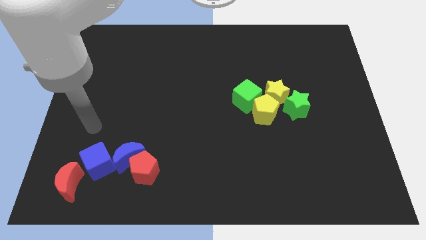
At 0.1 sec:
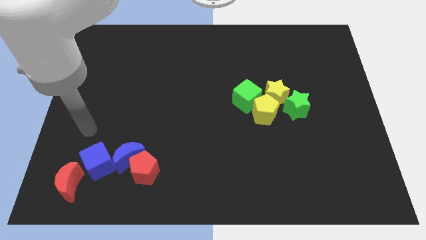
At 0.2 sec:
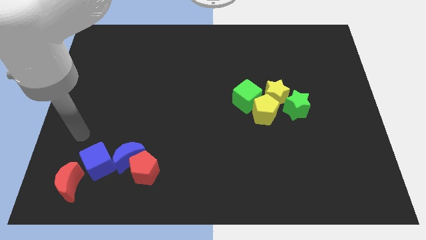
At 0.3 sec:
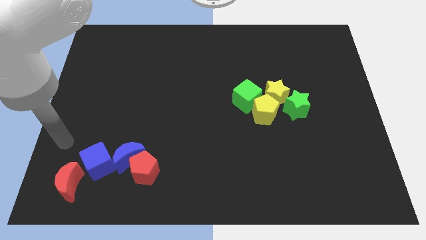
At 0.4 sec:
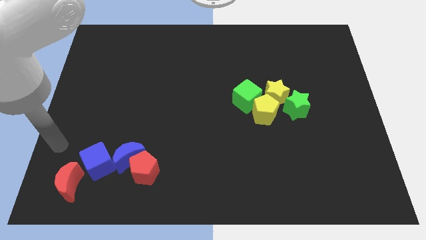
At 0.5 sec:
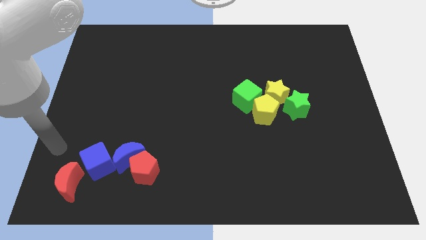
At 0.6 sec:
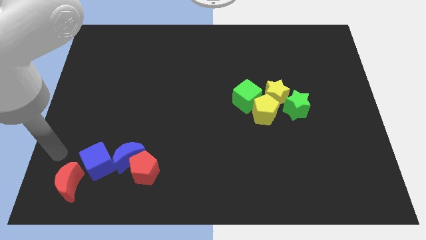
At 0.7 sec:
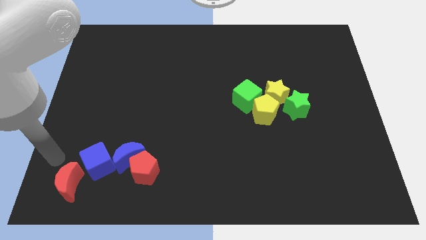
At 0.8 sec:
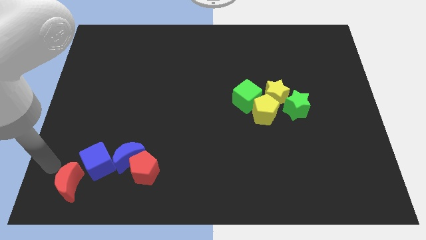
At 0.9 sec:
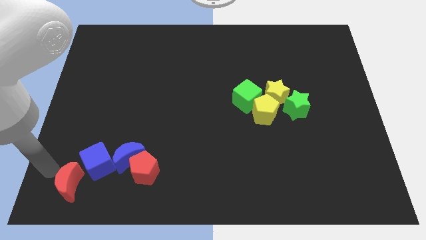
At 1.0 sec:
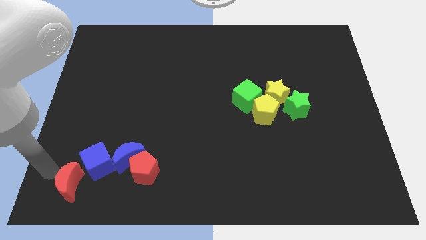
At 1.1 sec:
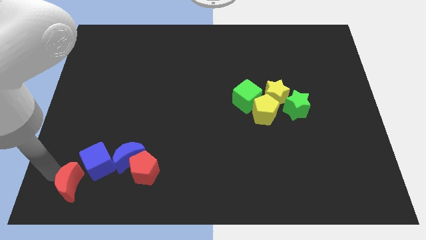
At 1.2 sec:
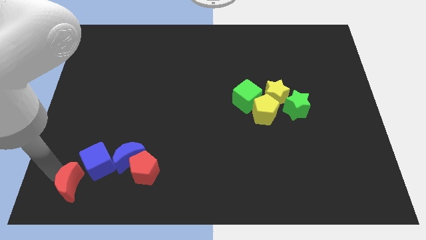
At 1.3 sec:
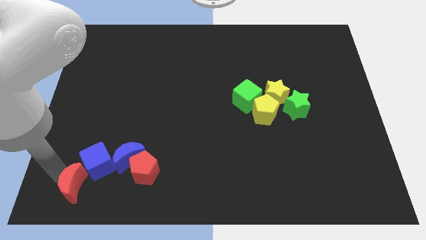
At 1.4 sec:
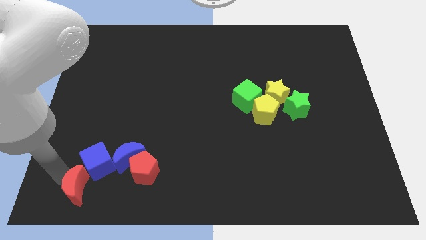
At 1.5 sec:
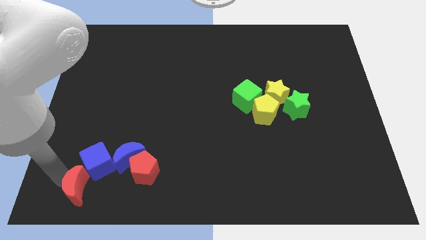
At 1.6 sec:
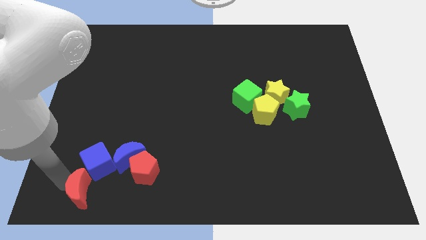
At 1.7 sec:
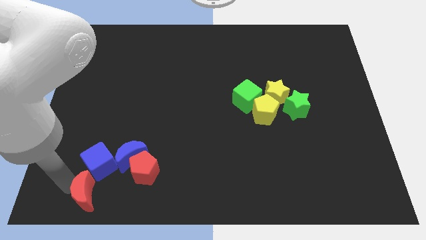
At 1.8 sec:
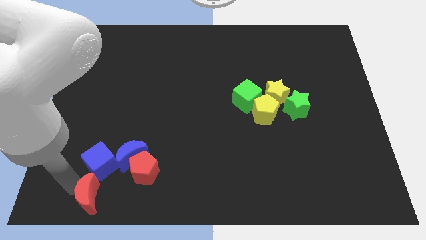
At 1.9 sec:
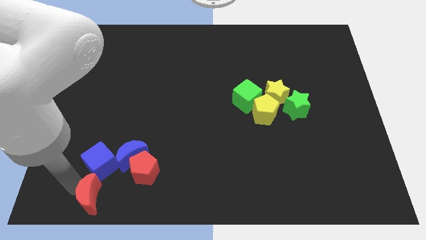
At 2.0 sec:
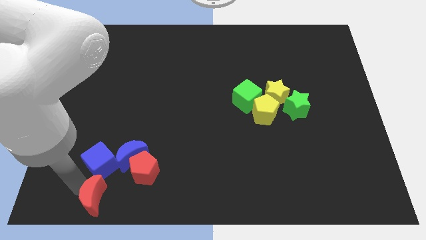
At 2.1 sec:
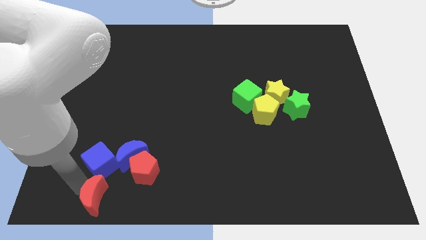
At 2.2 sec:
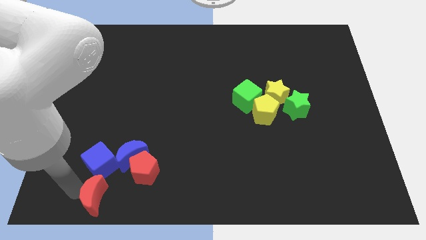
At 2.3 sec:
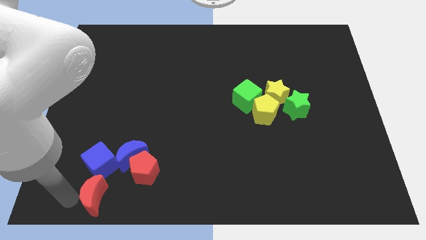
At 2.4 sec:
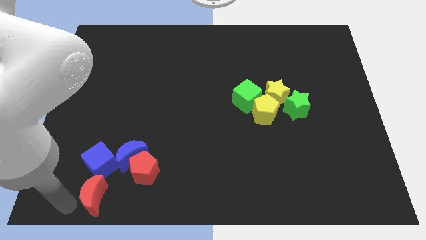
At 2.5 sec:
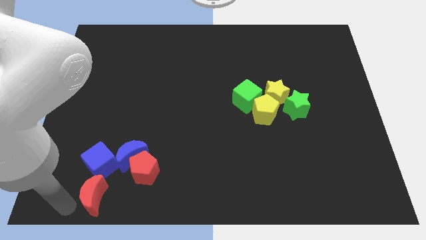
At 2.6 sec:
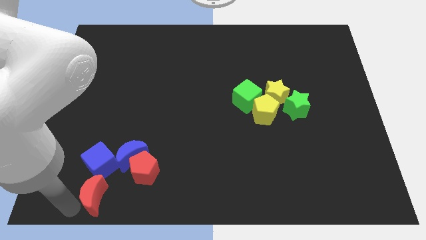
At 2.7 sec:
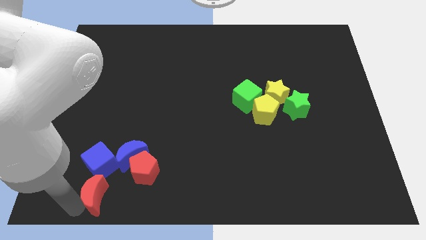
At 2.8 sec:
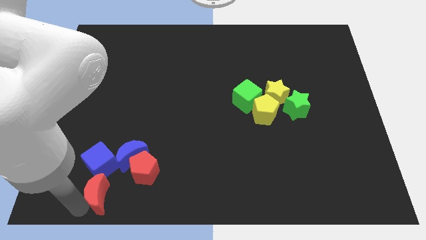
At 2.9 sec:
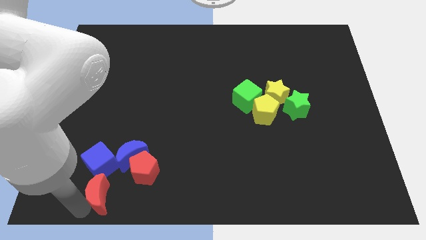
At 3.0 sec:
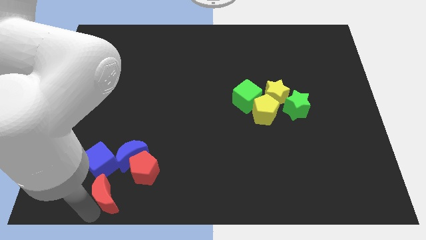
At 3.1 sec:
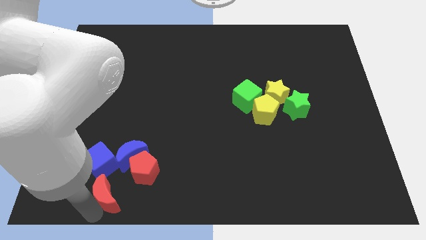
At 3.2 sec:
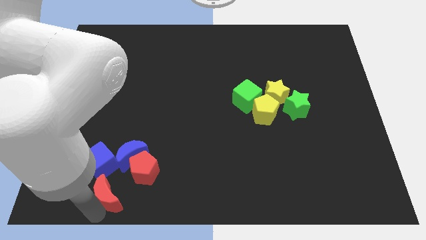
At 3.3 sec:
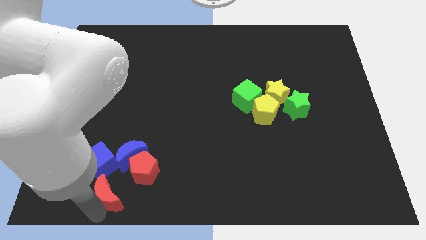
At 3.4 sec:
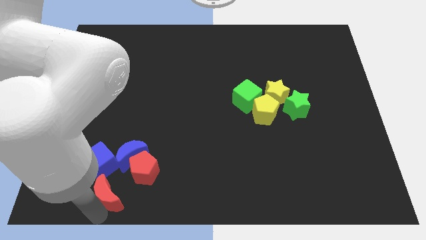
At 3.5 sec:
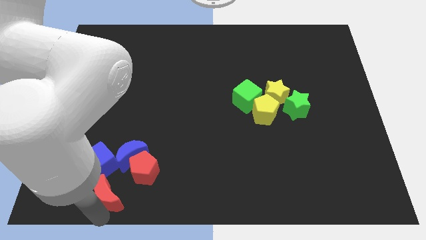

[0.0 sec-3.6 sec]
adjust the red moon to the bottom of the blue cube

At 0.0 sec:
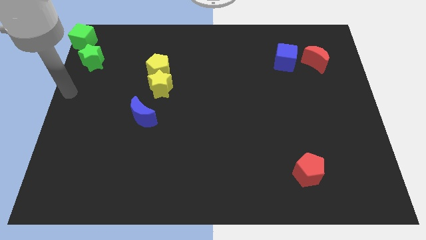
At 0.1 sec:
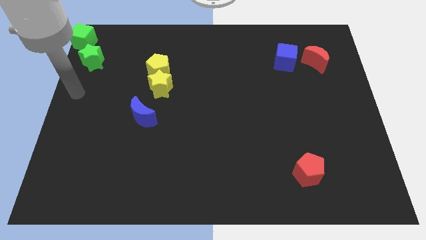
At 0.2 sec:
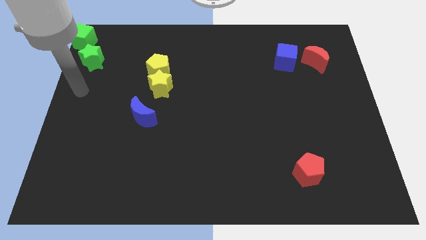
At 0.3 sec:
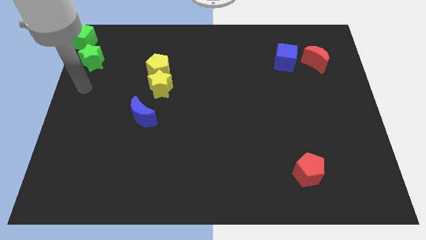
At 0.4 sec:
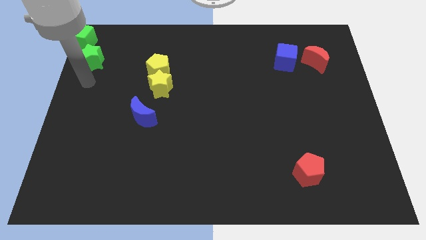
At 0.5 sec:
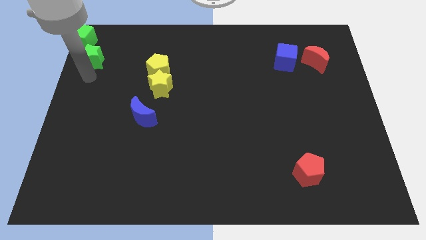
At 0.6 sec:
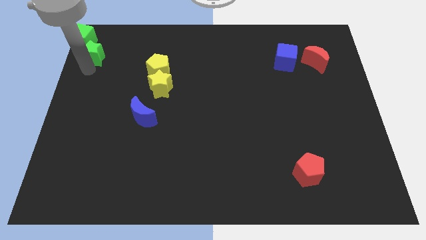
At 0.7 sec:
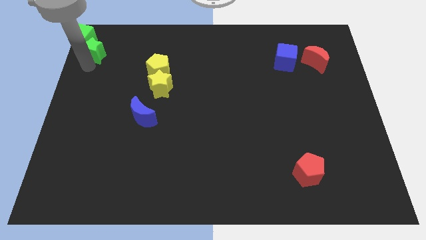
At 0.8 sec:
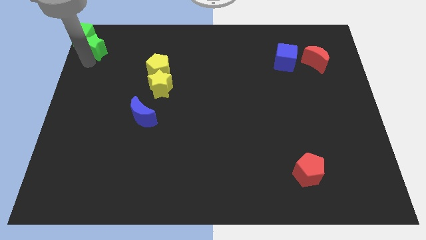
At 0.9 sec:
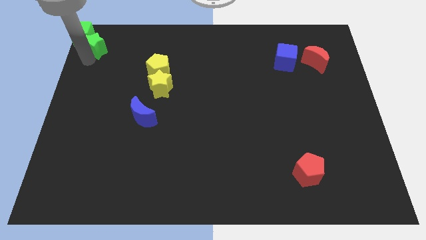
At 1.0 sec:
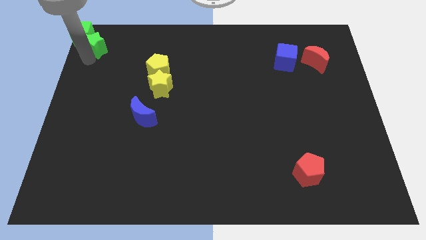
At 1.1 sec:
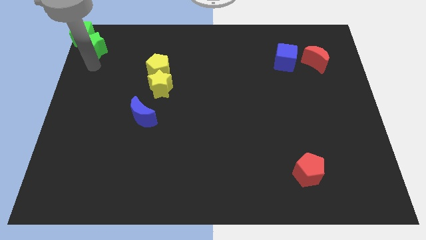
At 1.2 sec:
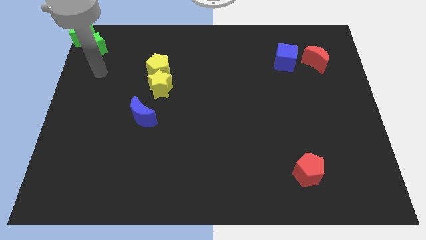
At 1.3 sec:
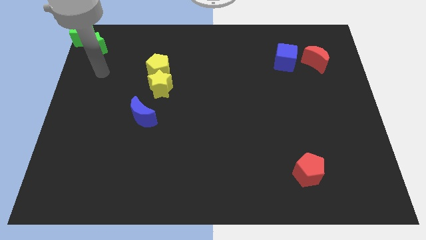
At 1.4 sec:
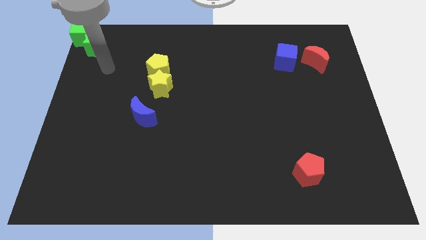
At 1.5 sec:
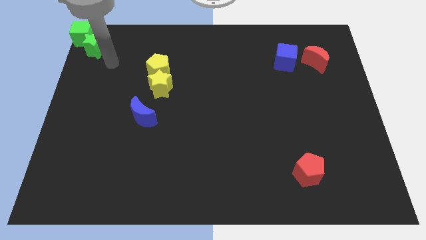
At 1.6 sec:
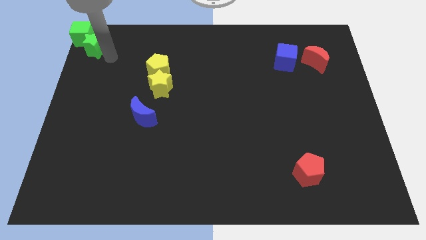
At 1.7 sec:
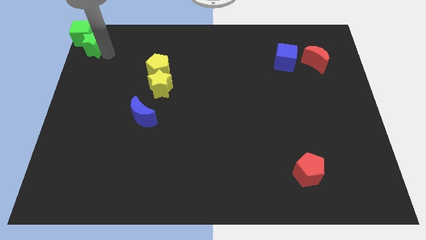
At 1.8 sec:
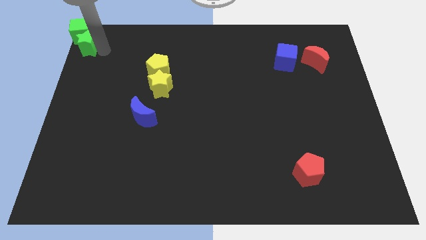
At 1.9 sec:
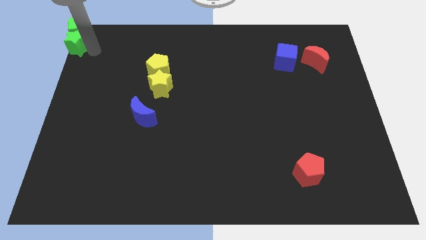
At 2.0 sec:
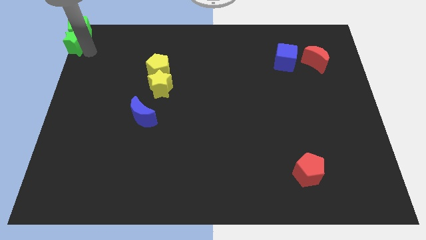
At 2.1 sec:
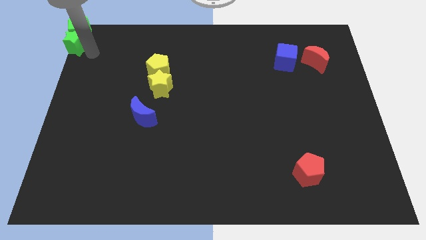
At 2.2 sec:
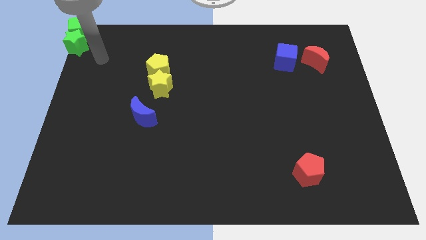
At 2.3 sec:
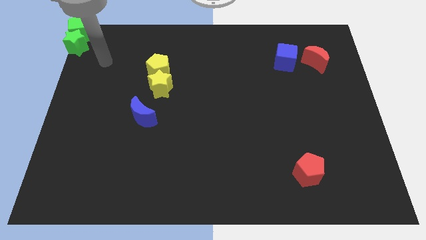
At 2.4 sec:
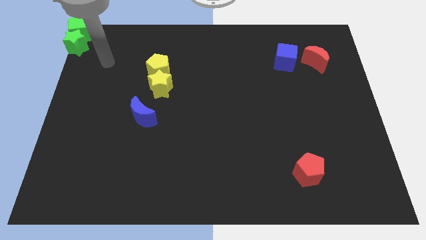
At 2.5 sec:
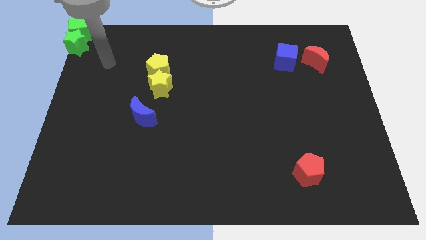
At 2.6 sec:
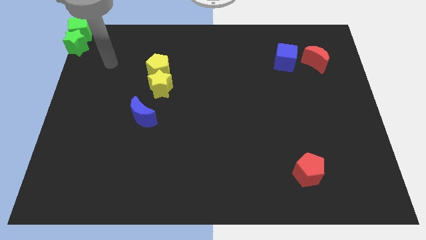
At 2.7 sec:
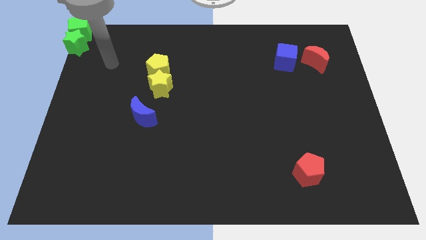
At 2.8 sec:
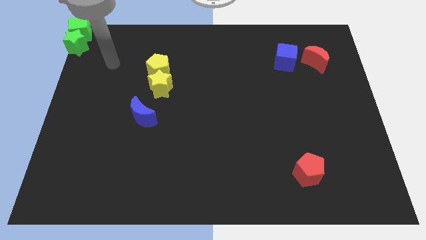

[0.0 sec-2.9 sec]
place the green star under the green cube

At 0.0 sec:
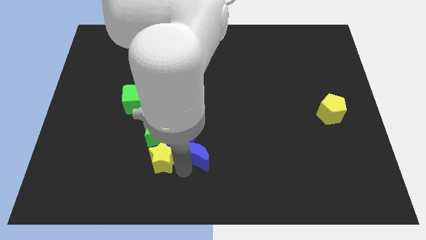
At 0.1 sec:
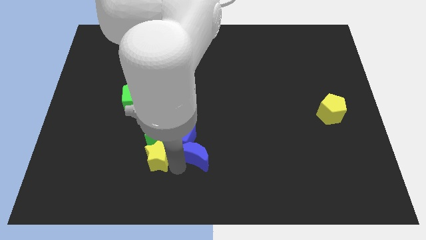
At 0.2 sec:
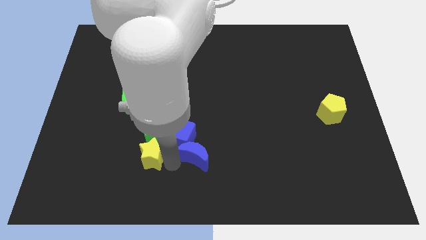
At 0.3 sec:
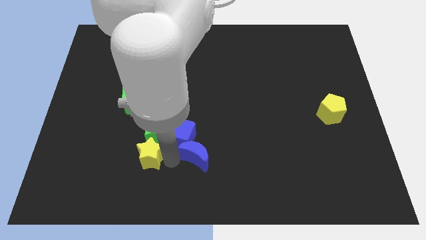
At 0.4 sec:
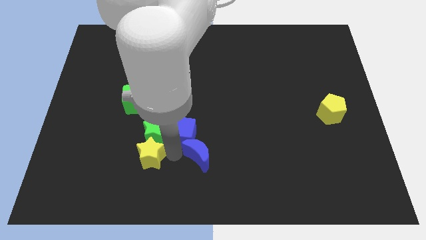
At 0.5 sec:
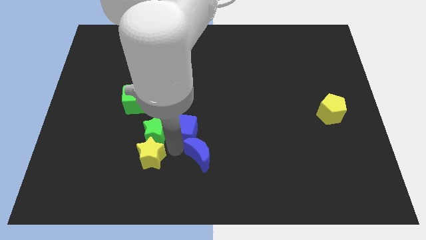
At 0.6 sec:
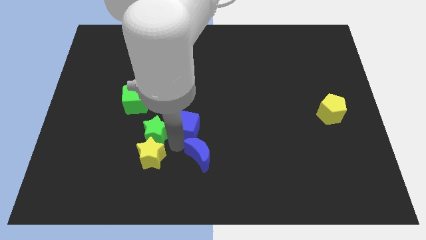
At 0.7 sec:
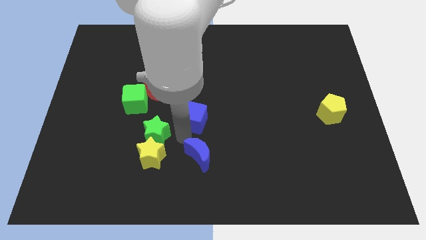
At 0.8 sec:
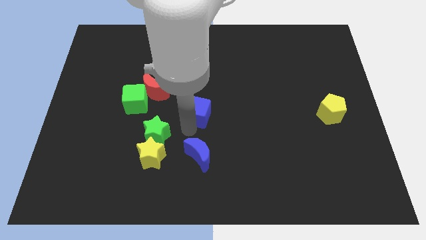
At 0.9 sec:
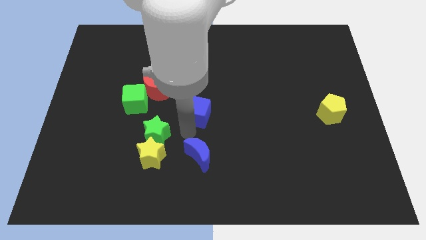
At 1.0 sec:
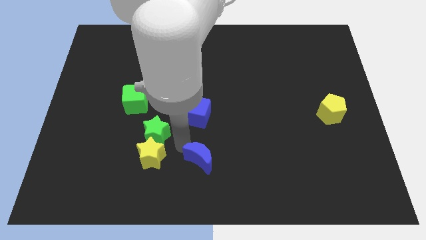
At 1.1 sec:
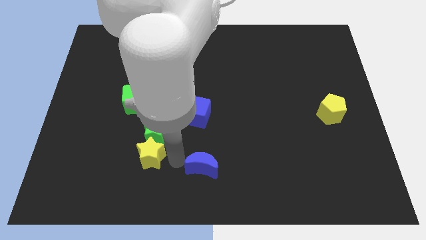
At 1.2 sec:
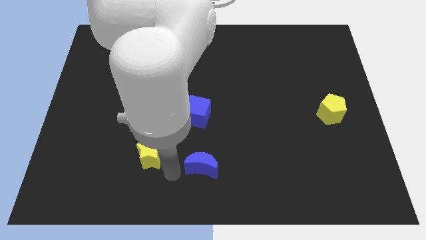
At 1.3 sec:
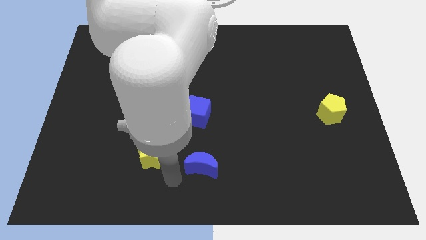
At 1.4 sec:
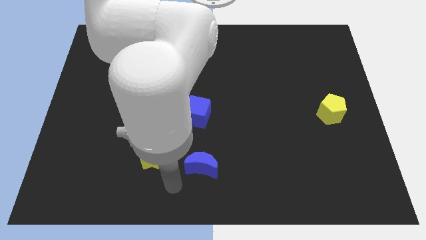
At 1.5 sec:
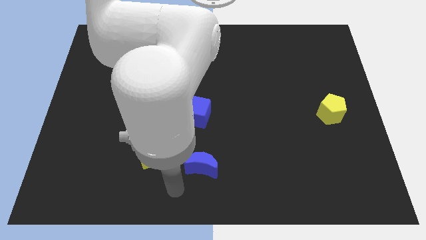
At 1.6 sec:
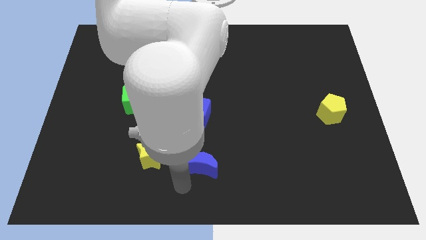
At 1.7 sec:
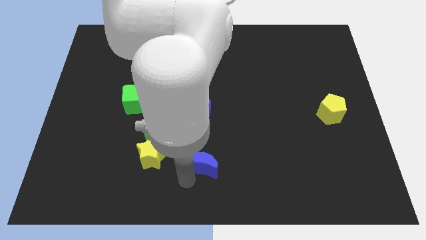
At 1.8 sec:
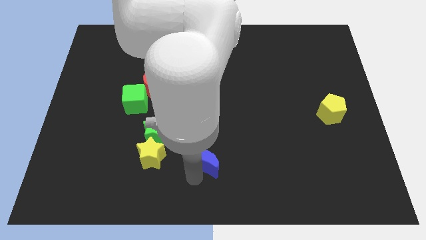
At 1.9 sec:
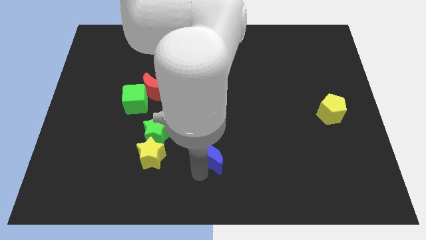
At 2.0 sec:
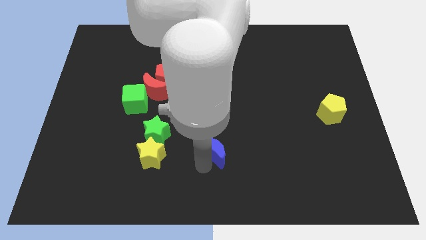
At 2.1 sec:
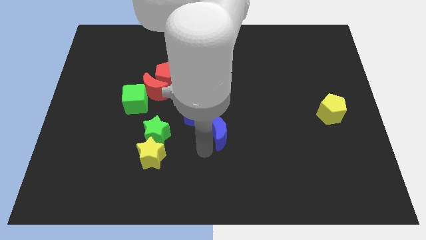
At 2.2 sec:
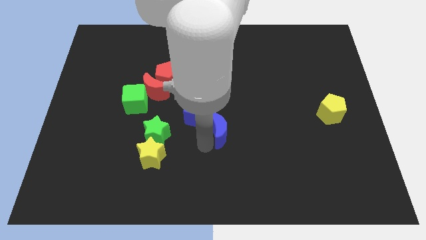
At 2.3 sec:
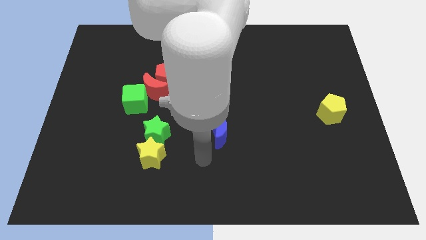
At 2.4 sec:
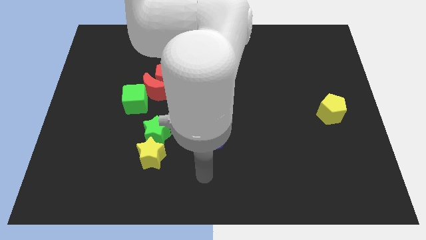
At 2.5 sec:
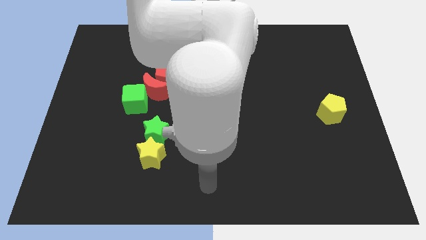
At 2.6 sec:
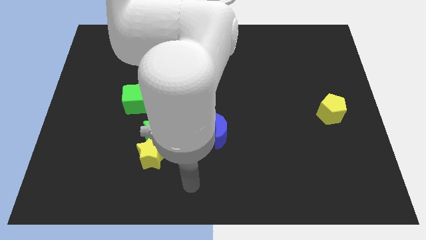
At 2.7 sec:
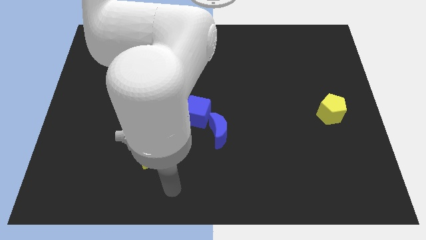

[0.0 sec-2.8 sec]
separate the blue blocks from the green and yellow stars
